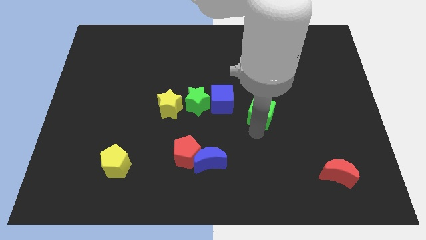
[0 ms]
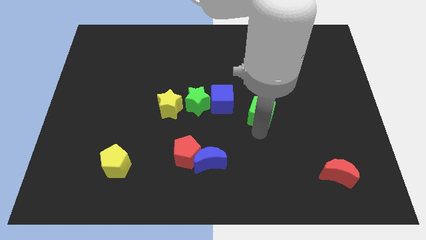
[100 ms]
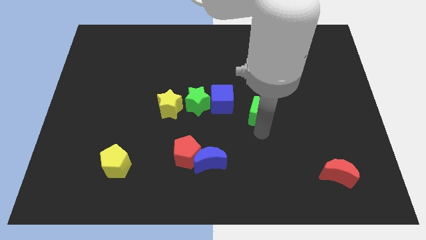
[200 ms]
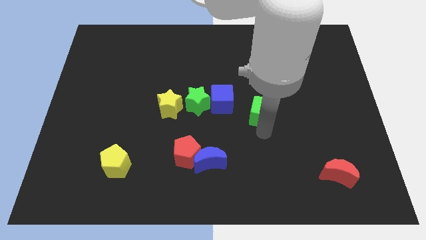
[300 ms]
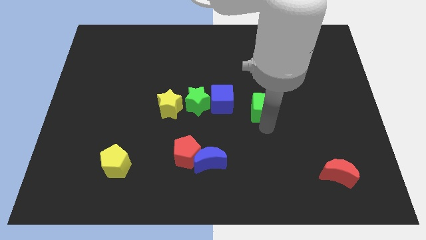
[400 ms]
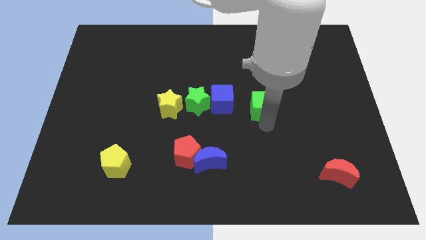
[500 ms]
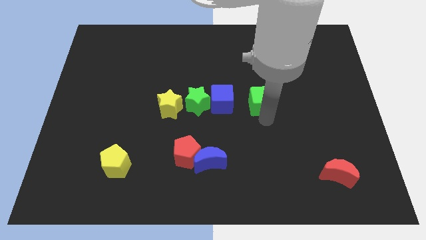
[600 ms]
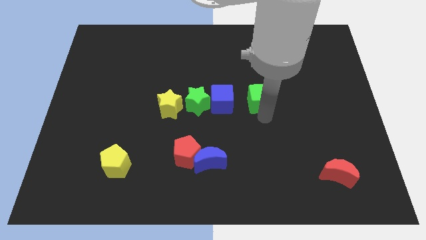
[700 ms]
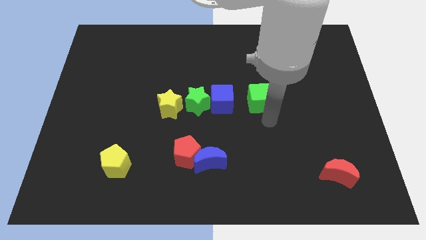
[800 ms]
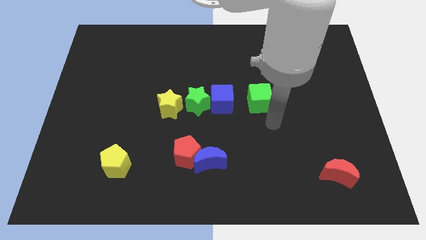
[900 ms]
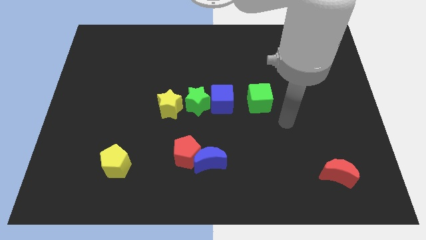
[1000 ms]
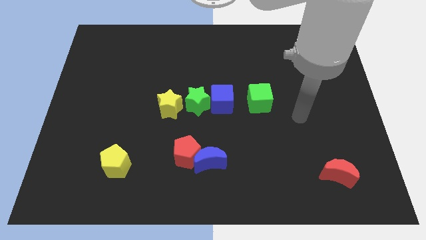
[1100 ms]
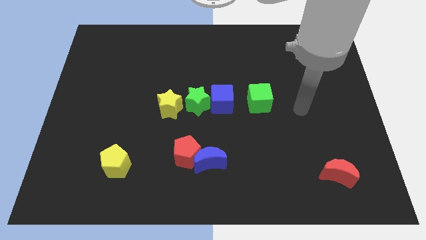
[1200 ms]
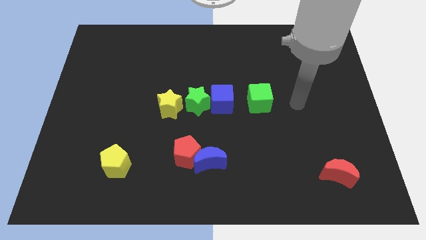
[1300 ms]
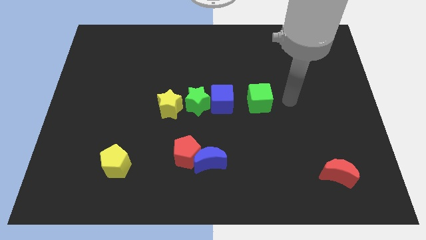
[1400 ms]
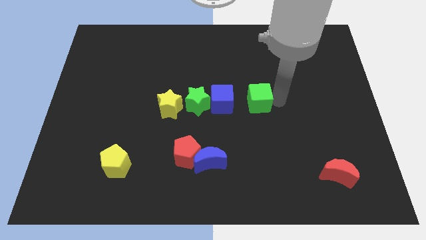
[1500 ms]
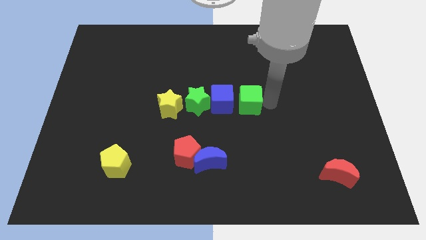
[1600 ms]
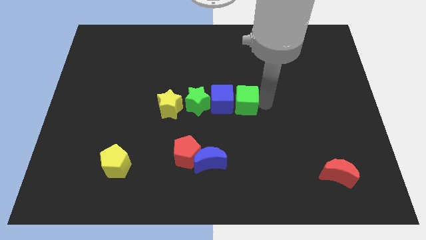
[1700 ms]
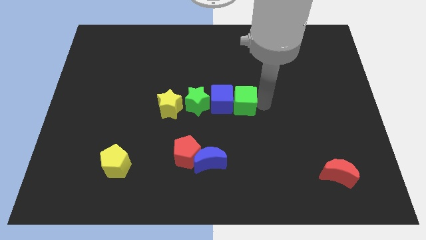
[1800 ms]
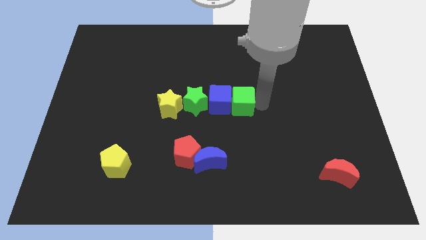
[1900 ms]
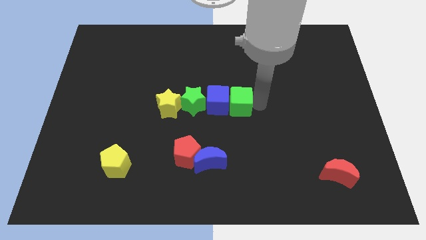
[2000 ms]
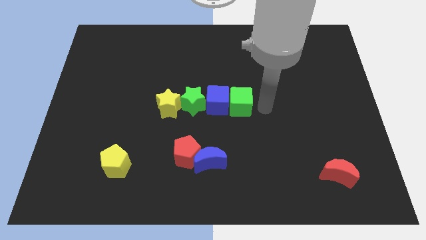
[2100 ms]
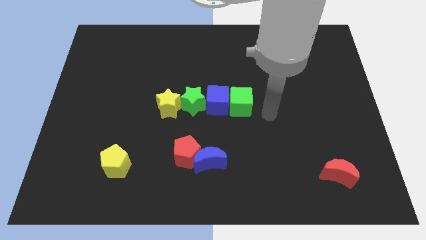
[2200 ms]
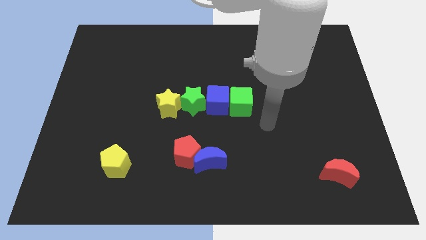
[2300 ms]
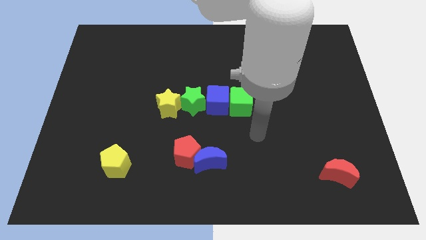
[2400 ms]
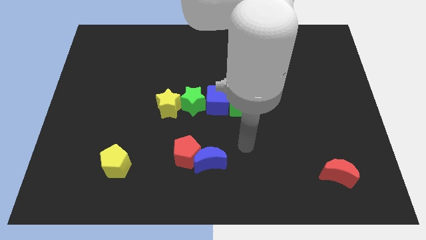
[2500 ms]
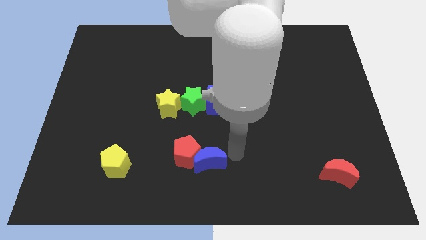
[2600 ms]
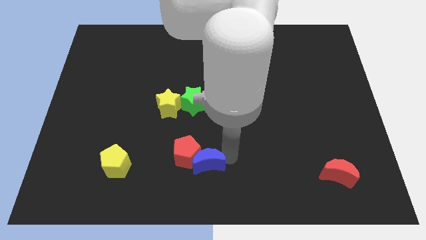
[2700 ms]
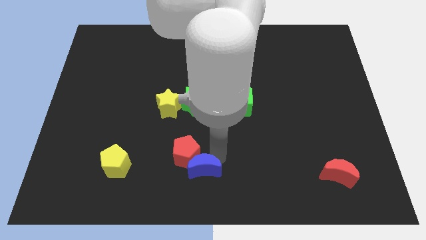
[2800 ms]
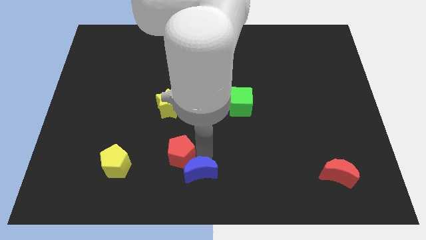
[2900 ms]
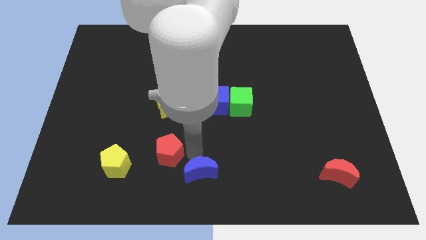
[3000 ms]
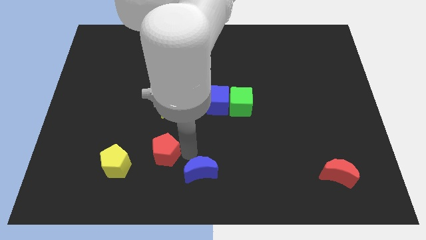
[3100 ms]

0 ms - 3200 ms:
place the green cube towards the right side of the blue cube

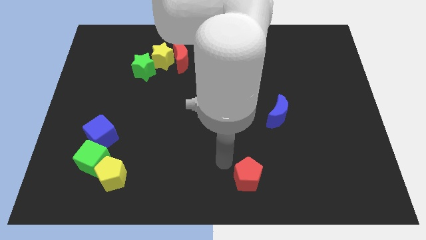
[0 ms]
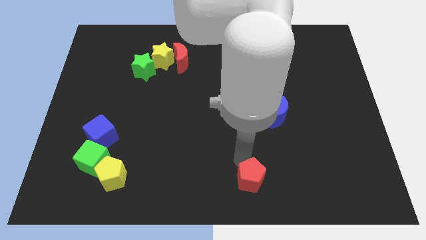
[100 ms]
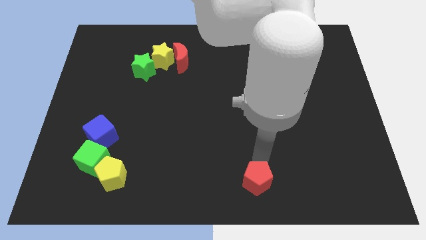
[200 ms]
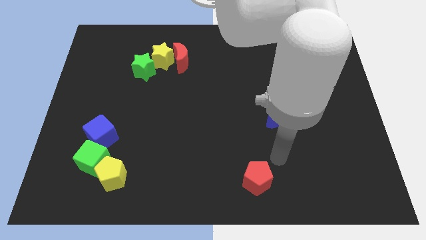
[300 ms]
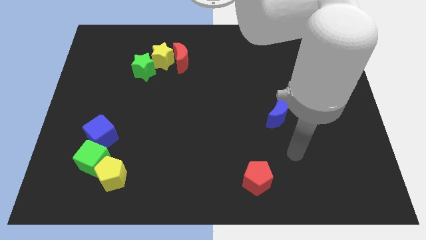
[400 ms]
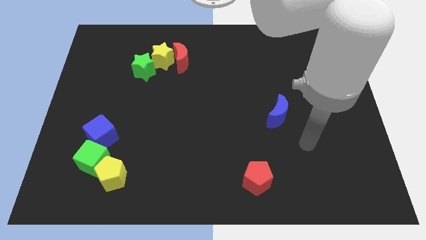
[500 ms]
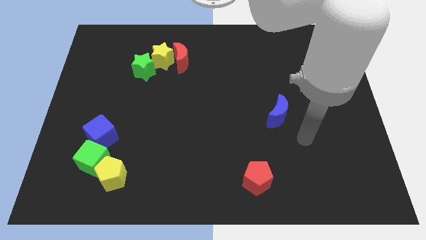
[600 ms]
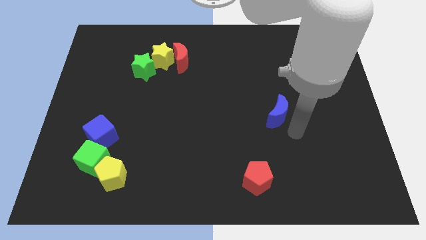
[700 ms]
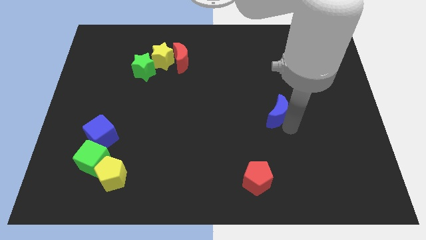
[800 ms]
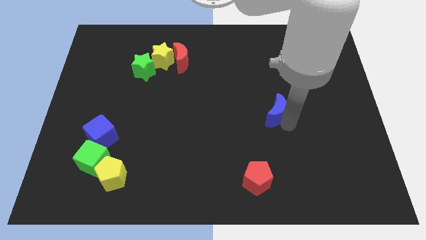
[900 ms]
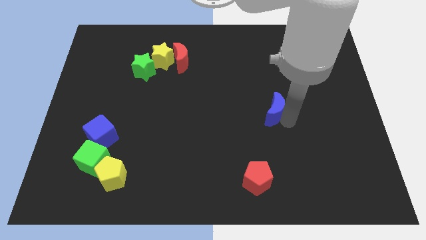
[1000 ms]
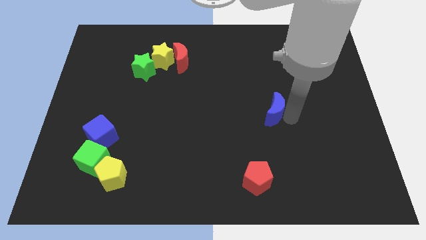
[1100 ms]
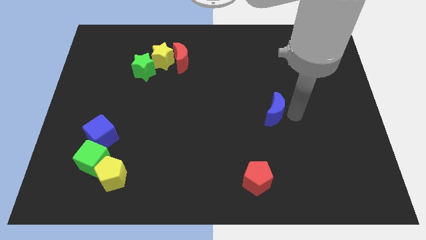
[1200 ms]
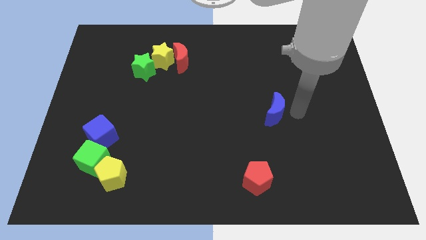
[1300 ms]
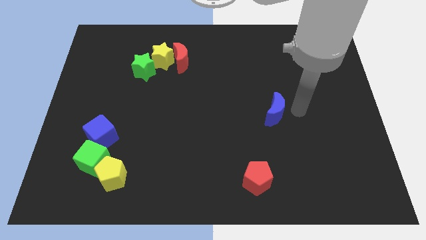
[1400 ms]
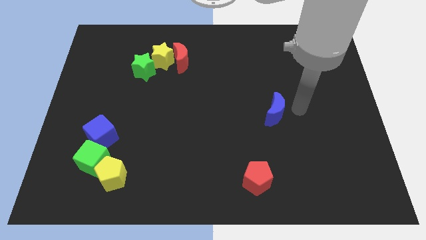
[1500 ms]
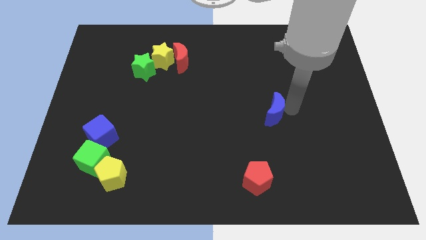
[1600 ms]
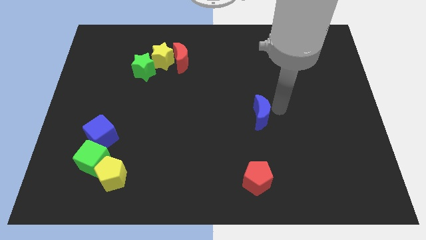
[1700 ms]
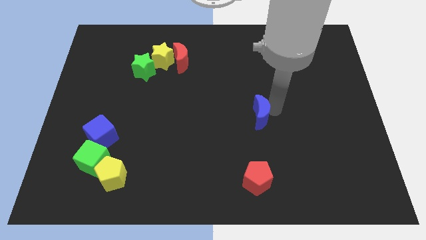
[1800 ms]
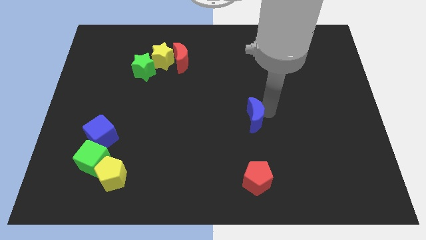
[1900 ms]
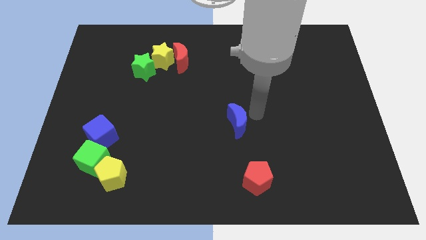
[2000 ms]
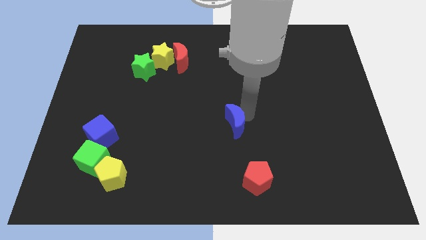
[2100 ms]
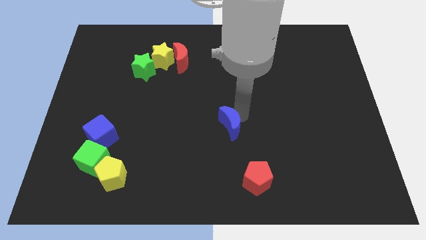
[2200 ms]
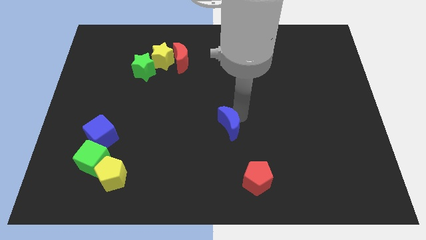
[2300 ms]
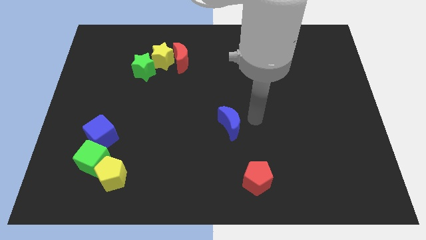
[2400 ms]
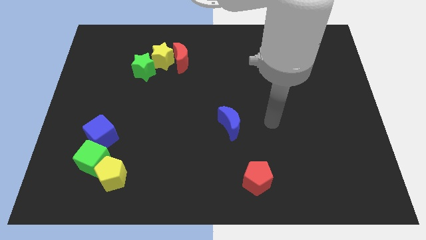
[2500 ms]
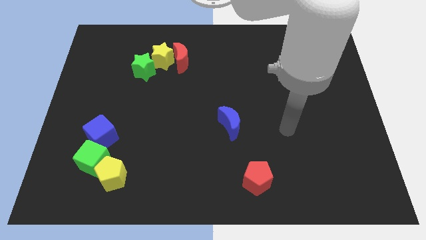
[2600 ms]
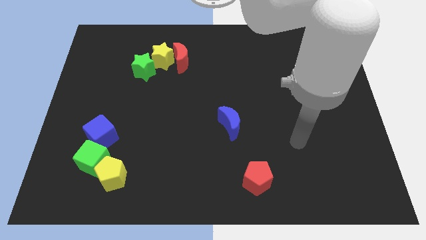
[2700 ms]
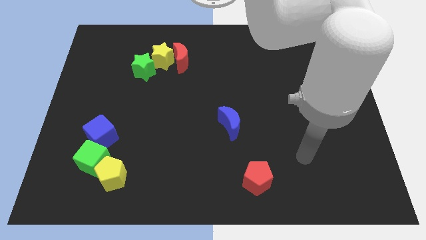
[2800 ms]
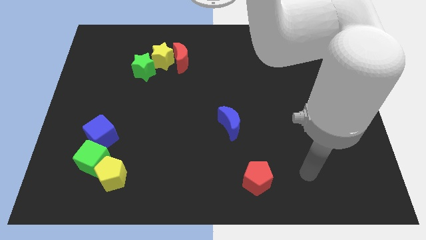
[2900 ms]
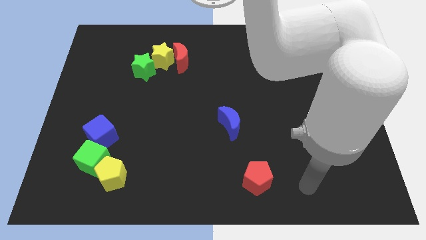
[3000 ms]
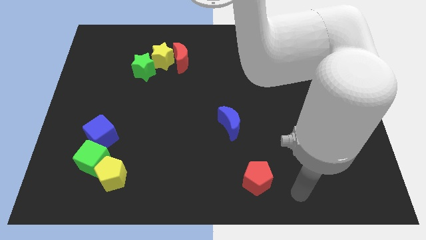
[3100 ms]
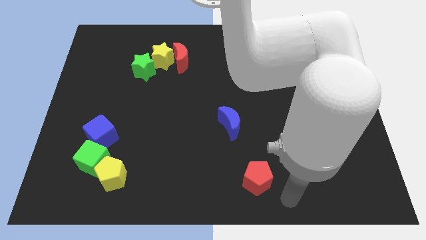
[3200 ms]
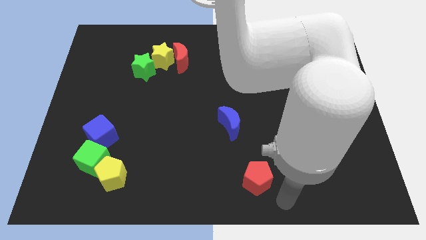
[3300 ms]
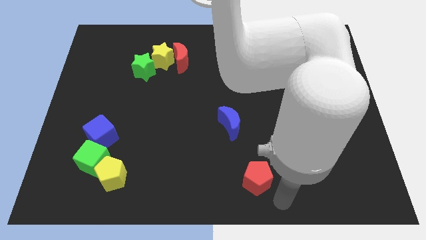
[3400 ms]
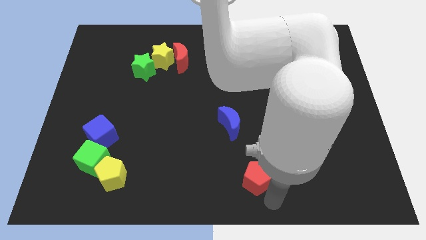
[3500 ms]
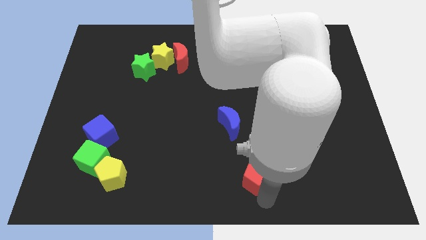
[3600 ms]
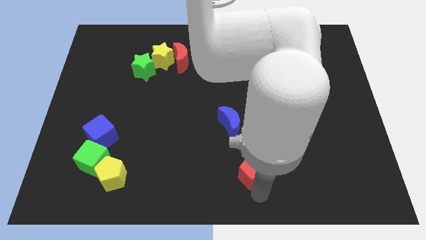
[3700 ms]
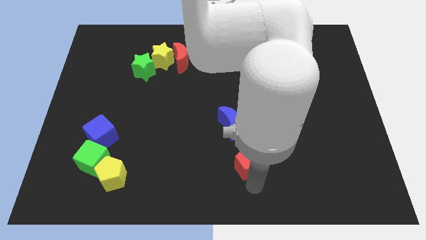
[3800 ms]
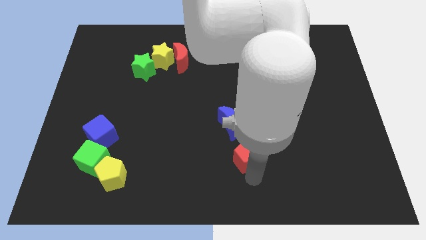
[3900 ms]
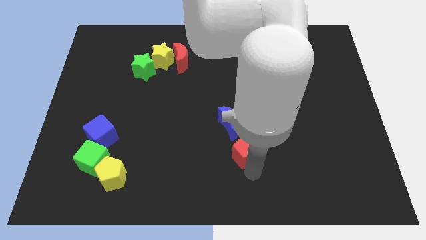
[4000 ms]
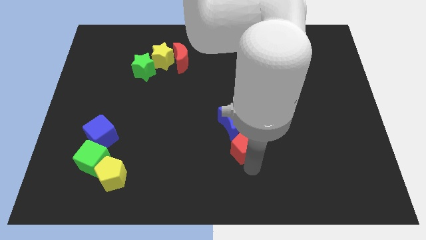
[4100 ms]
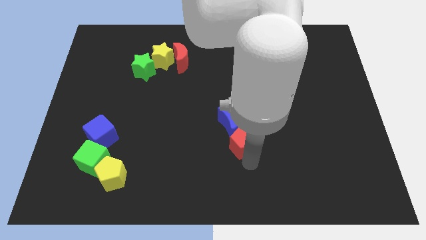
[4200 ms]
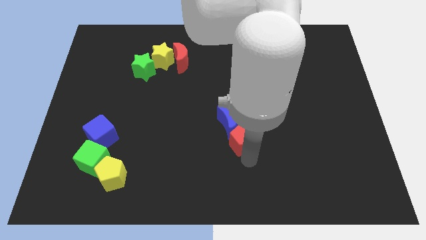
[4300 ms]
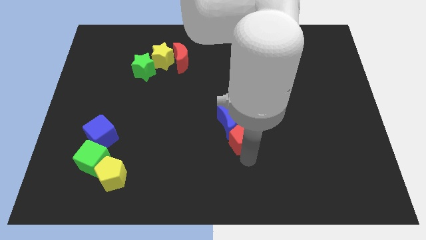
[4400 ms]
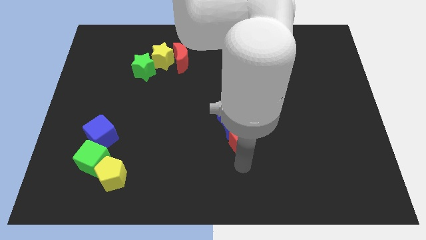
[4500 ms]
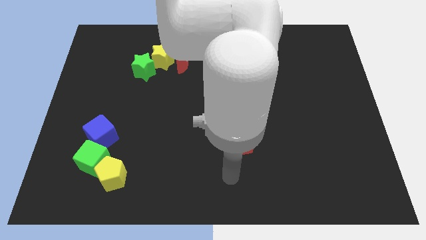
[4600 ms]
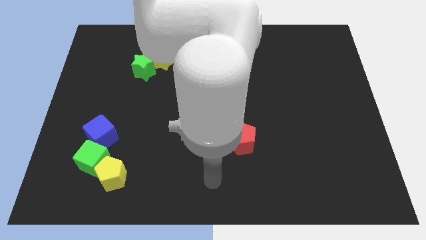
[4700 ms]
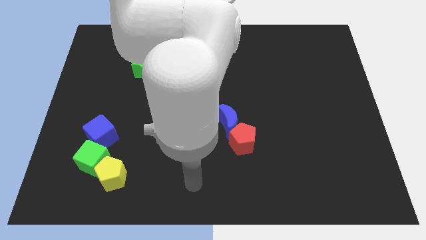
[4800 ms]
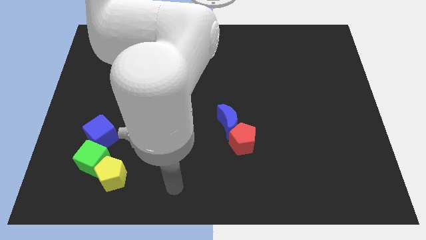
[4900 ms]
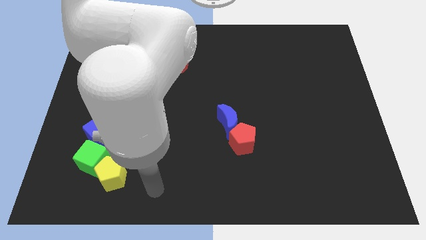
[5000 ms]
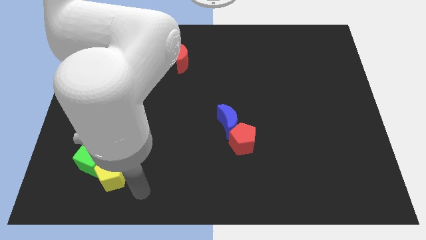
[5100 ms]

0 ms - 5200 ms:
place the red pentagon and the blue crescent at the center of the board

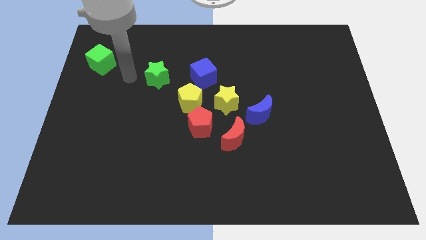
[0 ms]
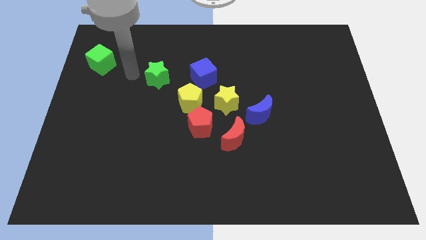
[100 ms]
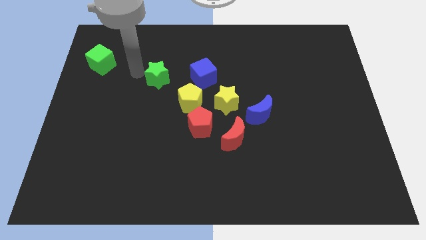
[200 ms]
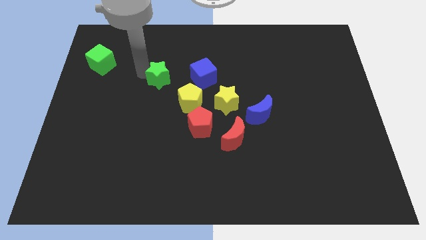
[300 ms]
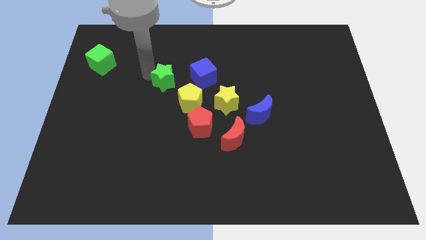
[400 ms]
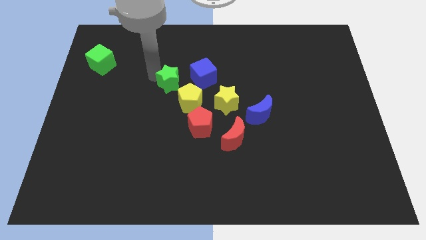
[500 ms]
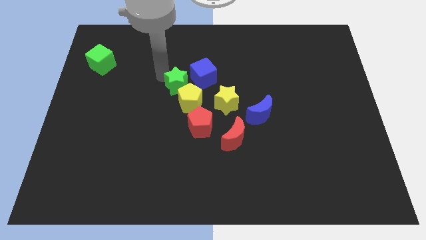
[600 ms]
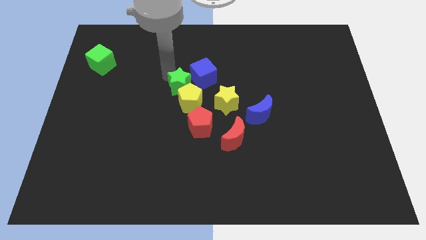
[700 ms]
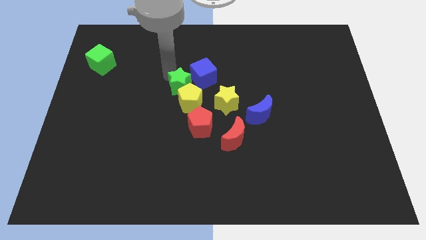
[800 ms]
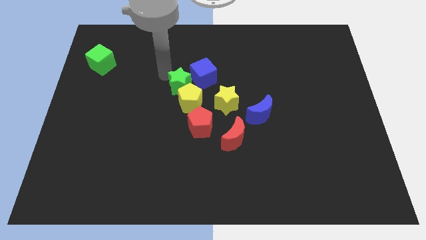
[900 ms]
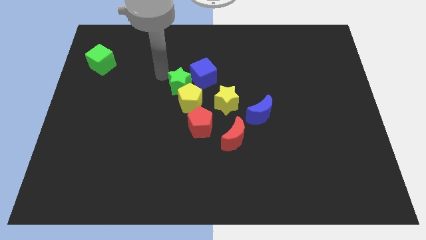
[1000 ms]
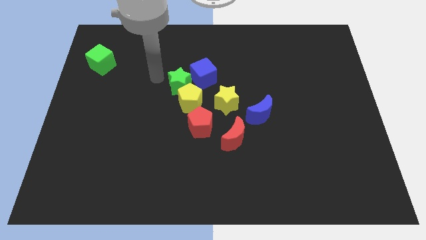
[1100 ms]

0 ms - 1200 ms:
move the green star to the left of the blue cube
